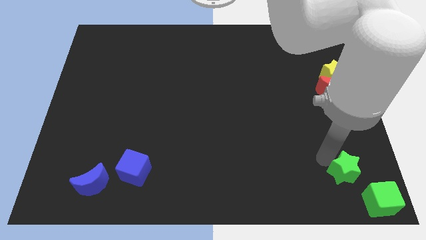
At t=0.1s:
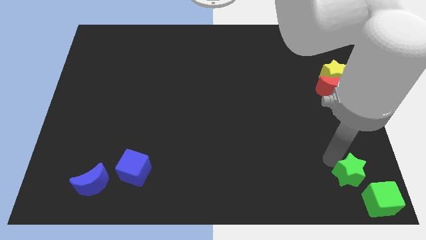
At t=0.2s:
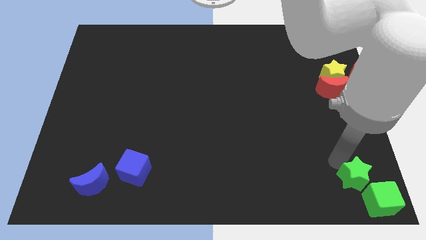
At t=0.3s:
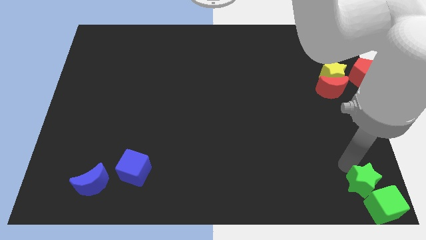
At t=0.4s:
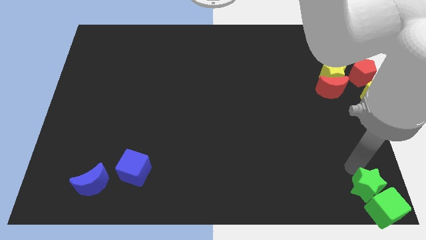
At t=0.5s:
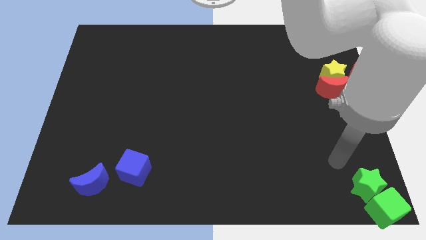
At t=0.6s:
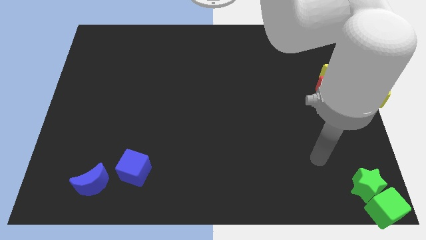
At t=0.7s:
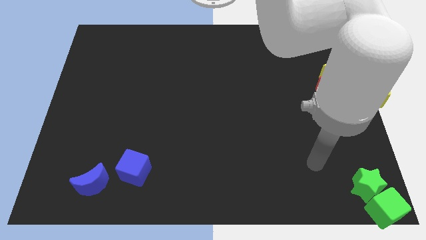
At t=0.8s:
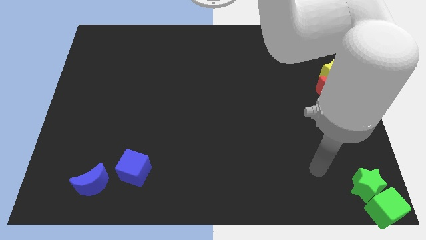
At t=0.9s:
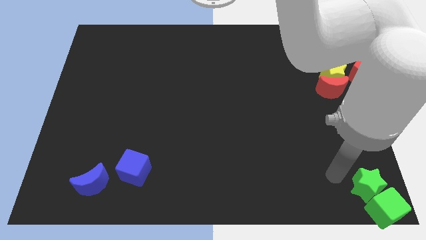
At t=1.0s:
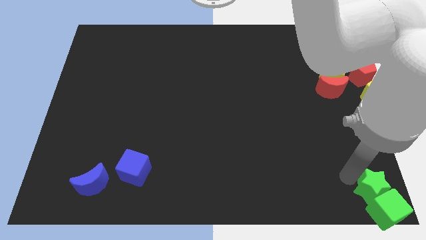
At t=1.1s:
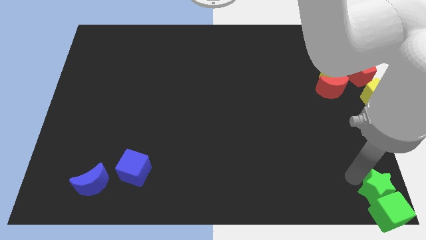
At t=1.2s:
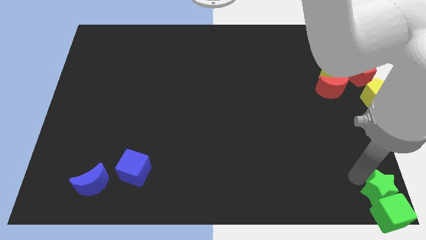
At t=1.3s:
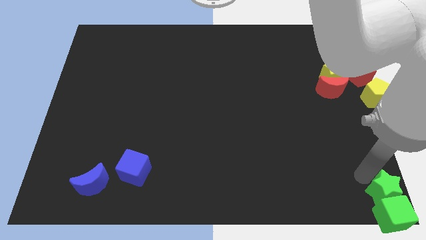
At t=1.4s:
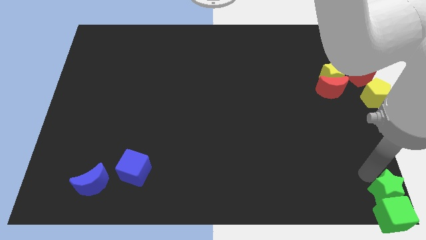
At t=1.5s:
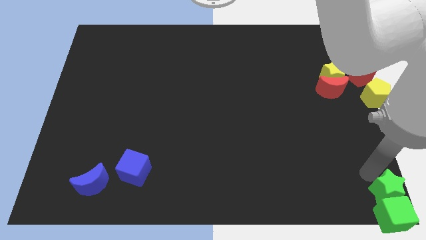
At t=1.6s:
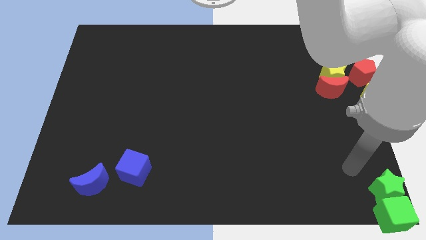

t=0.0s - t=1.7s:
move the green star into the green cube

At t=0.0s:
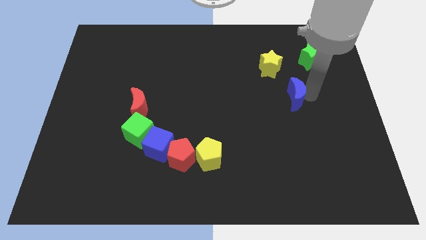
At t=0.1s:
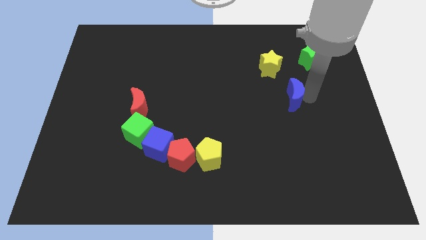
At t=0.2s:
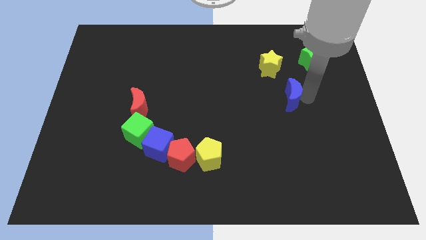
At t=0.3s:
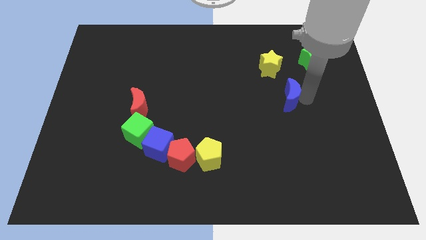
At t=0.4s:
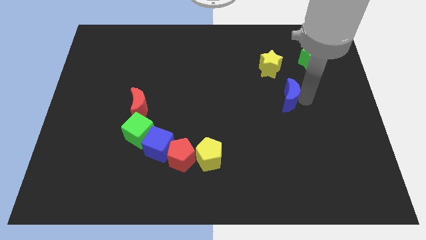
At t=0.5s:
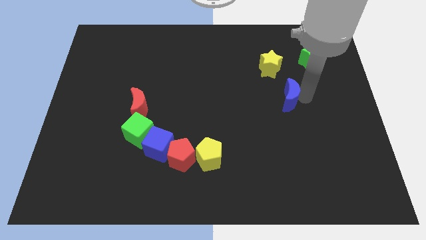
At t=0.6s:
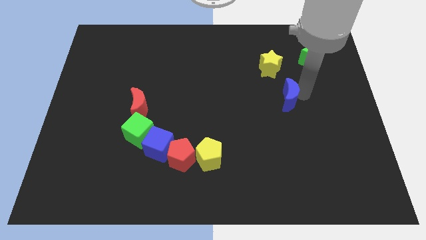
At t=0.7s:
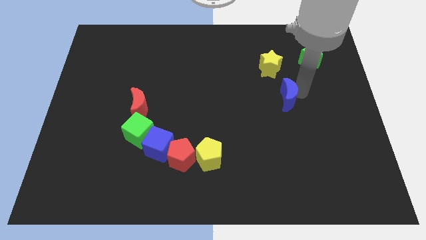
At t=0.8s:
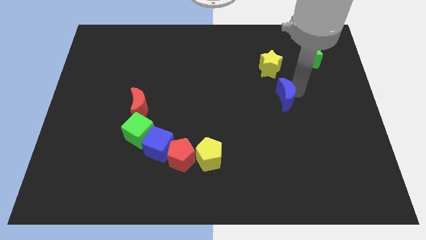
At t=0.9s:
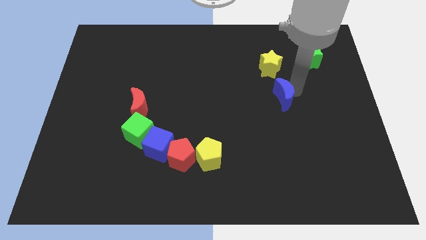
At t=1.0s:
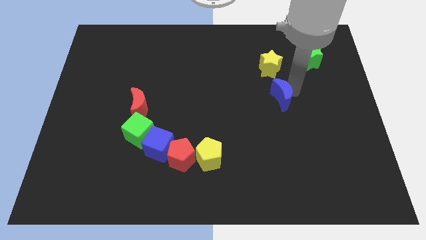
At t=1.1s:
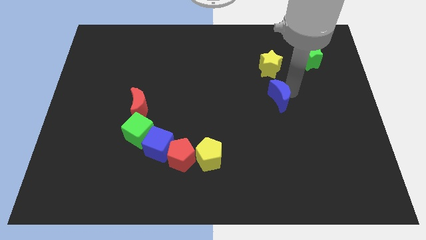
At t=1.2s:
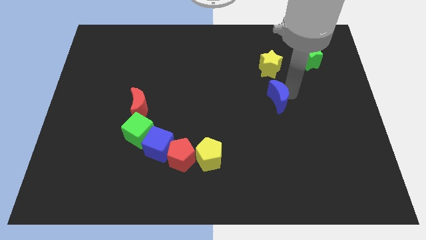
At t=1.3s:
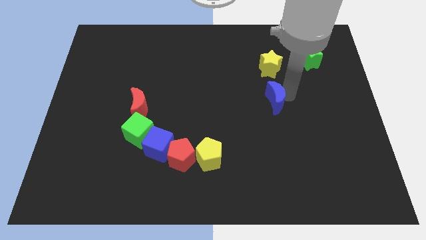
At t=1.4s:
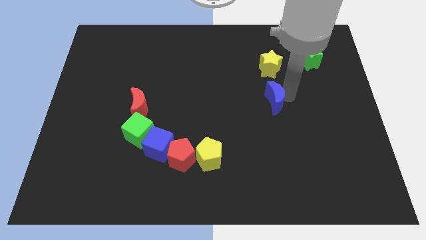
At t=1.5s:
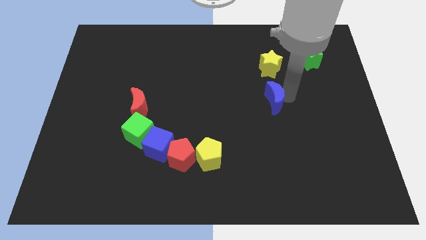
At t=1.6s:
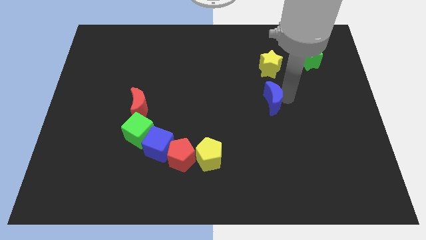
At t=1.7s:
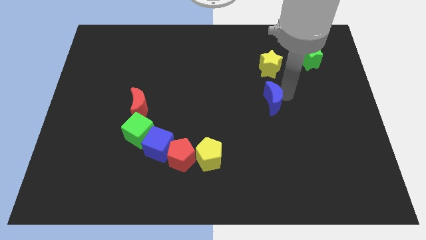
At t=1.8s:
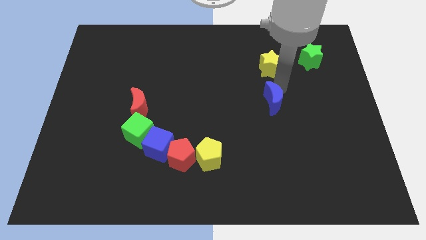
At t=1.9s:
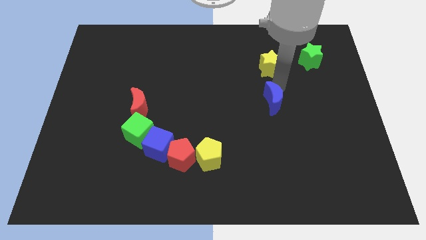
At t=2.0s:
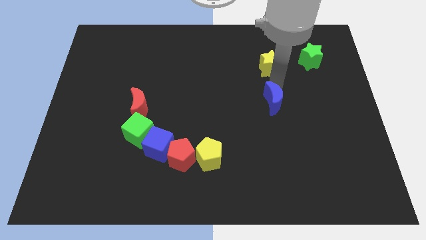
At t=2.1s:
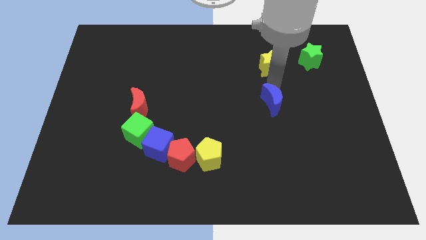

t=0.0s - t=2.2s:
put the blue crescent below the yellow star

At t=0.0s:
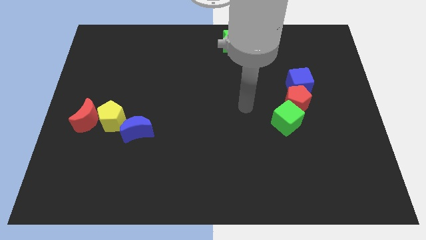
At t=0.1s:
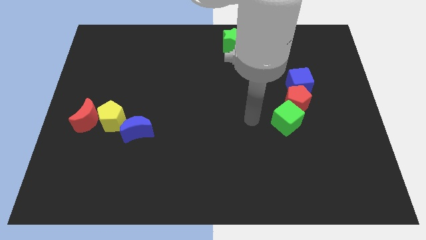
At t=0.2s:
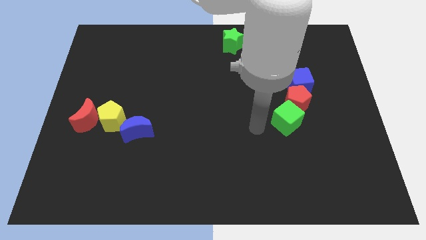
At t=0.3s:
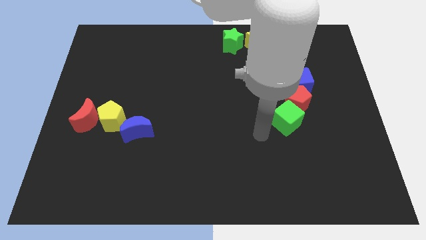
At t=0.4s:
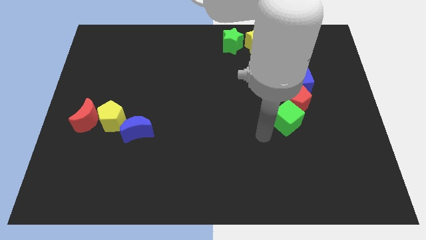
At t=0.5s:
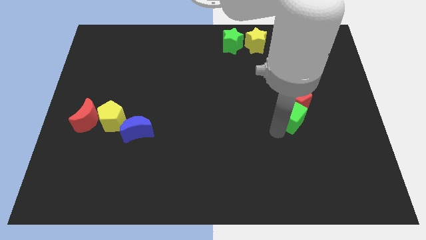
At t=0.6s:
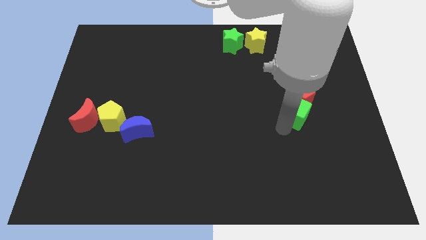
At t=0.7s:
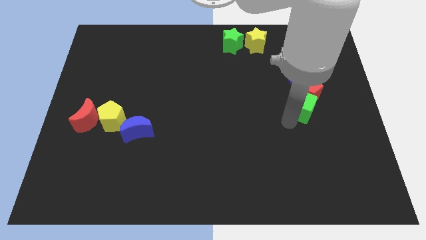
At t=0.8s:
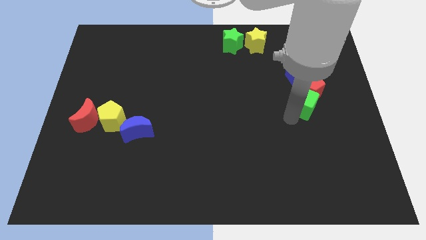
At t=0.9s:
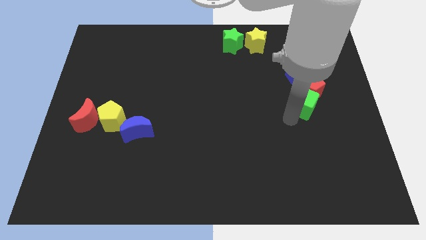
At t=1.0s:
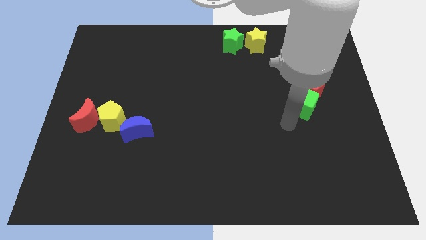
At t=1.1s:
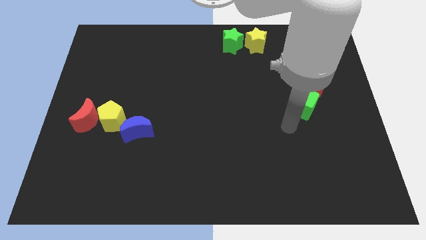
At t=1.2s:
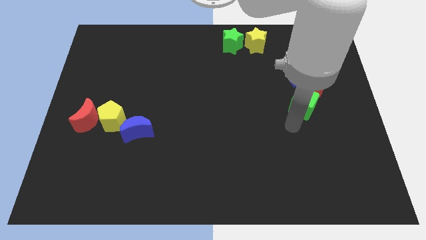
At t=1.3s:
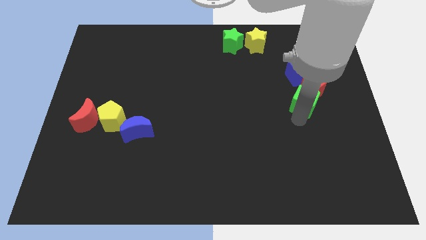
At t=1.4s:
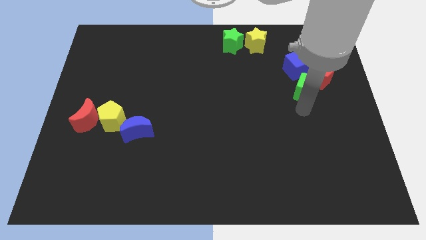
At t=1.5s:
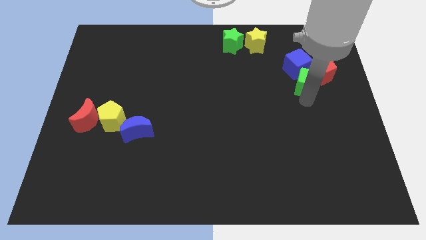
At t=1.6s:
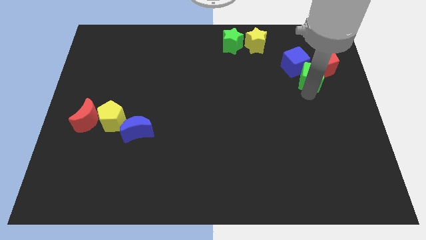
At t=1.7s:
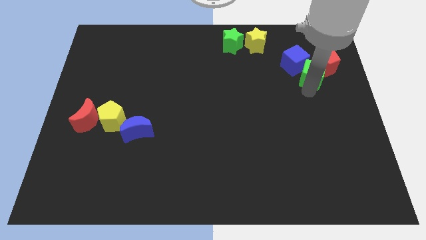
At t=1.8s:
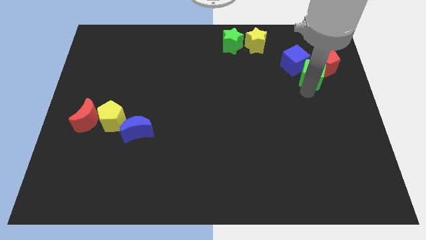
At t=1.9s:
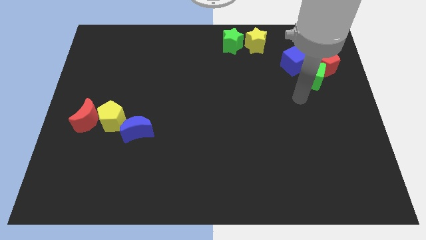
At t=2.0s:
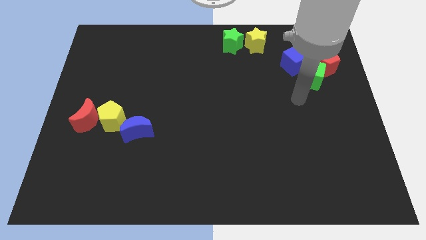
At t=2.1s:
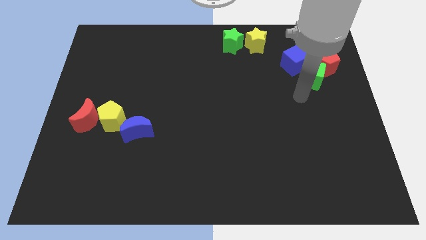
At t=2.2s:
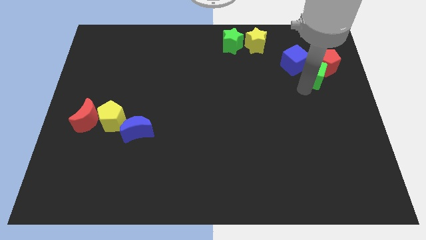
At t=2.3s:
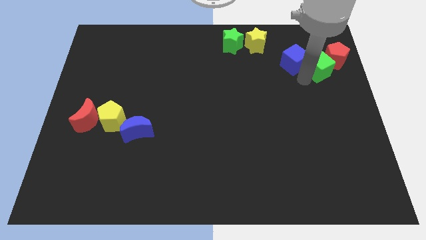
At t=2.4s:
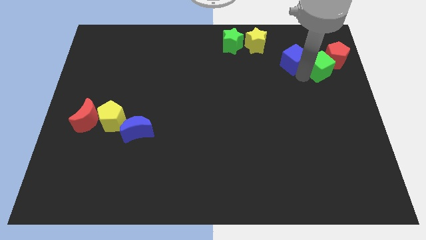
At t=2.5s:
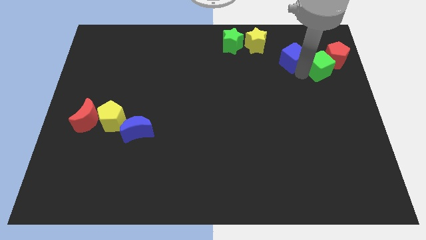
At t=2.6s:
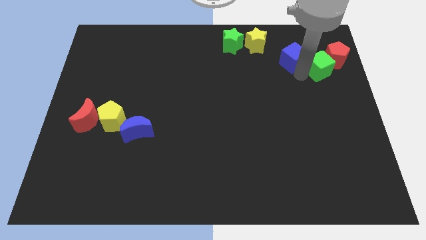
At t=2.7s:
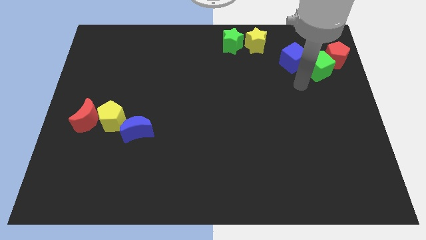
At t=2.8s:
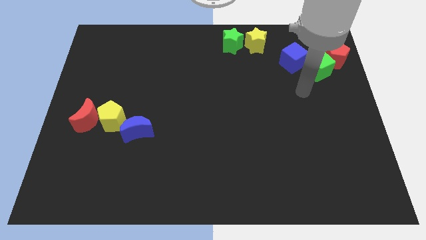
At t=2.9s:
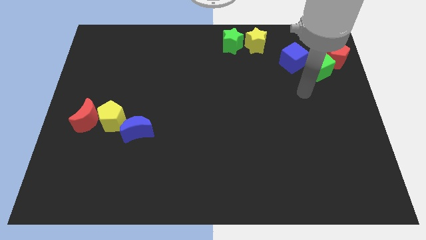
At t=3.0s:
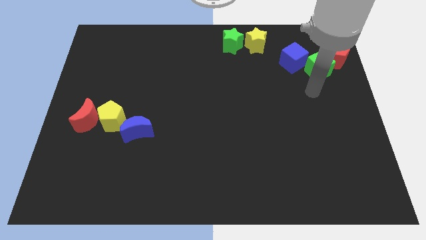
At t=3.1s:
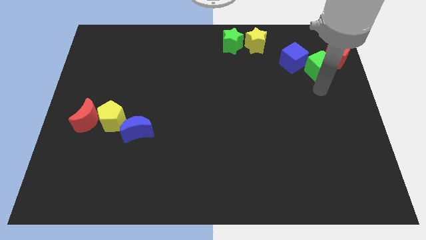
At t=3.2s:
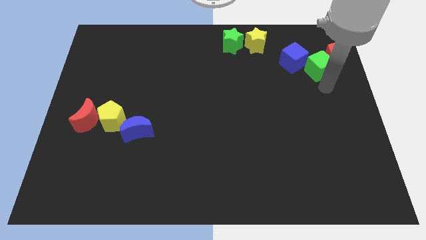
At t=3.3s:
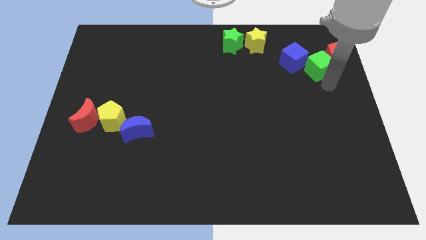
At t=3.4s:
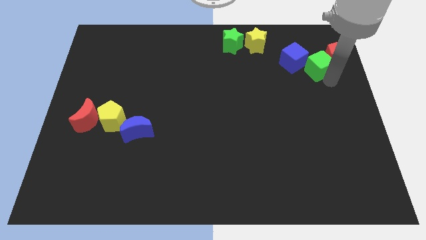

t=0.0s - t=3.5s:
push the green cube the red pentagon and blue cube to the top

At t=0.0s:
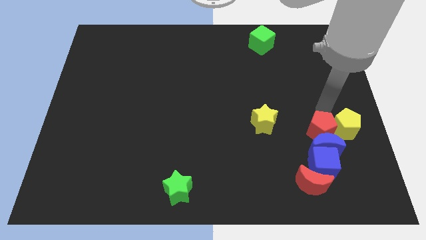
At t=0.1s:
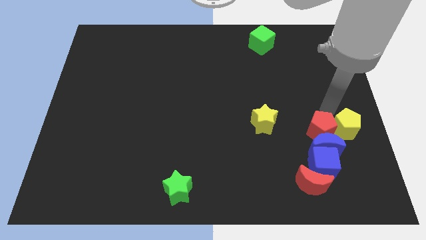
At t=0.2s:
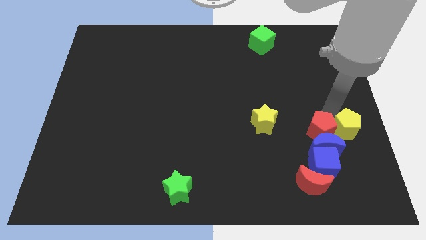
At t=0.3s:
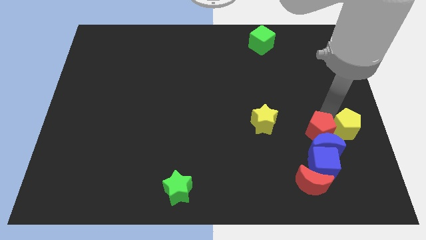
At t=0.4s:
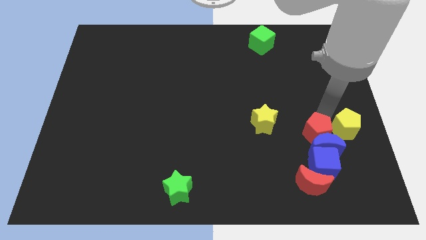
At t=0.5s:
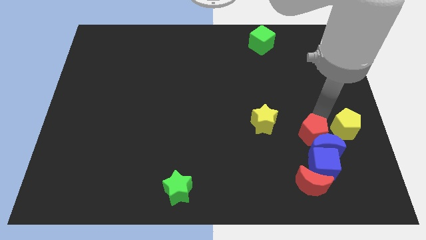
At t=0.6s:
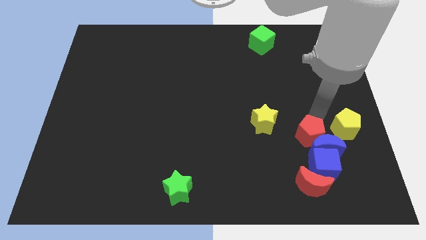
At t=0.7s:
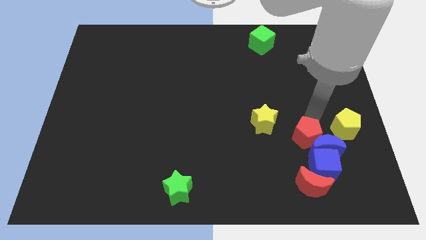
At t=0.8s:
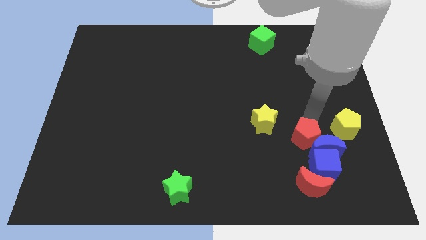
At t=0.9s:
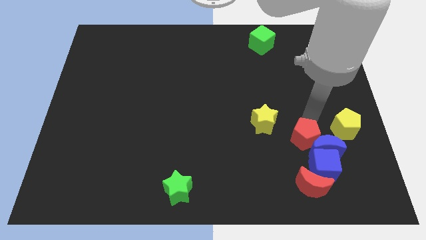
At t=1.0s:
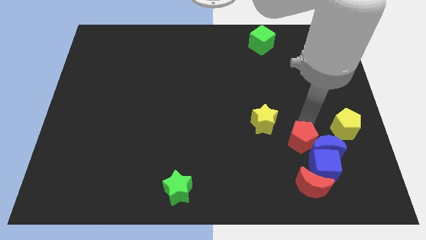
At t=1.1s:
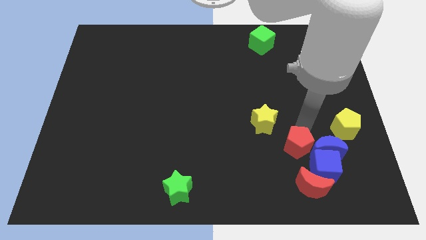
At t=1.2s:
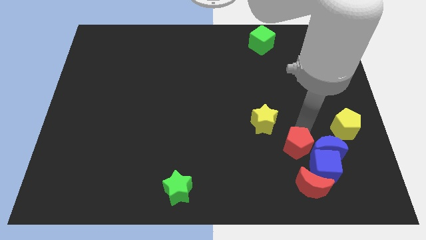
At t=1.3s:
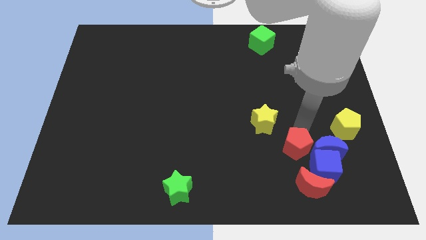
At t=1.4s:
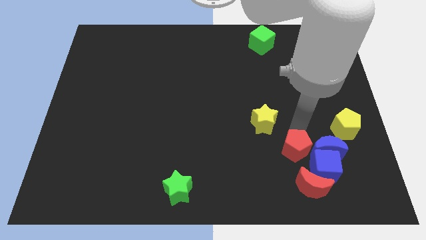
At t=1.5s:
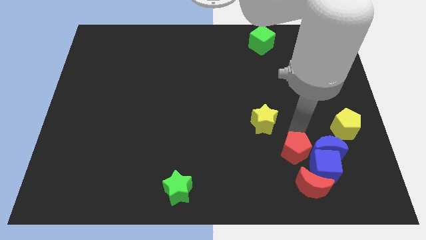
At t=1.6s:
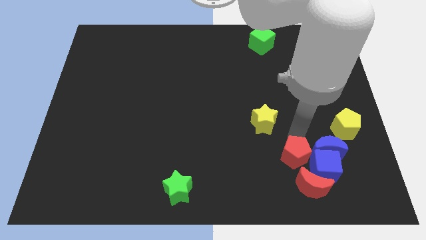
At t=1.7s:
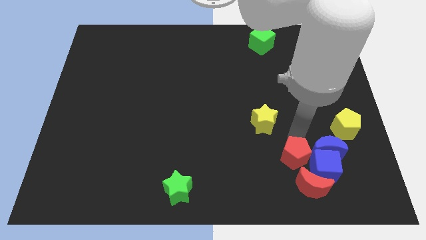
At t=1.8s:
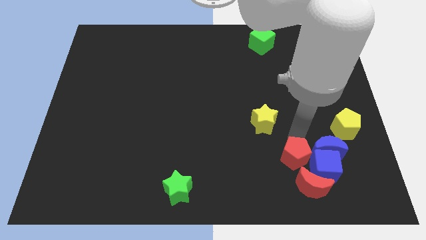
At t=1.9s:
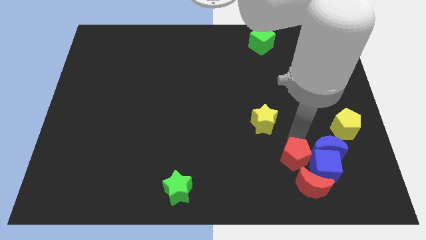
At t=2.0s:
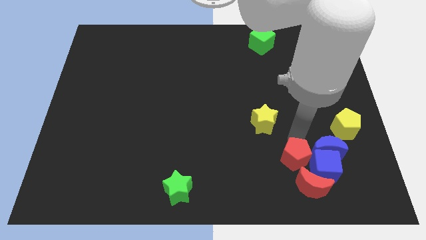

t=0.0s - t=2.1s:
drag the red pentagon at the top right side of the red crescent
